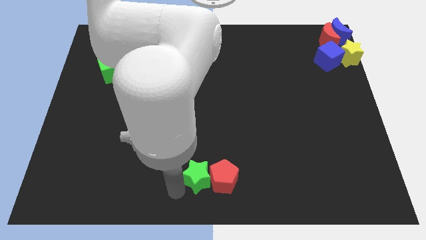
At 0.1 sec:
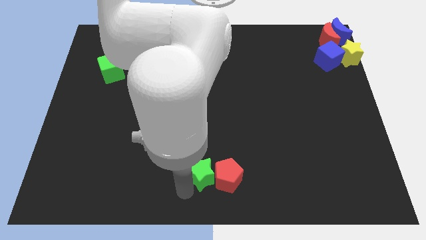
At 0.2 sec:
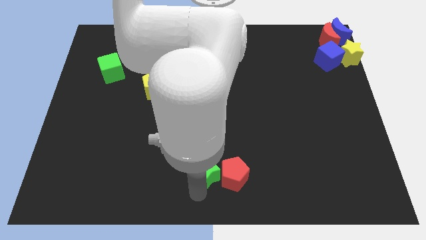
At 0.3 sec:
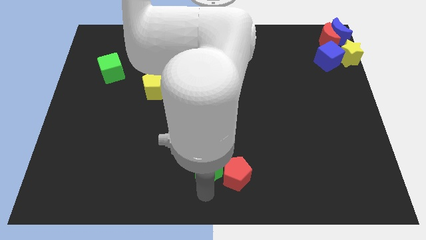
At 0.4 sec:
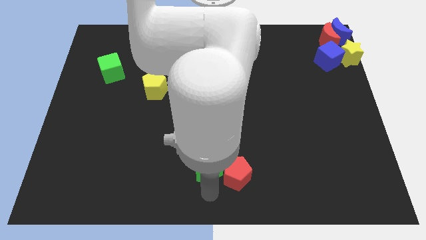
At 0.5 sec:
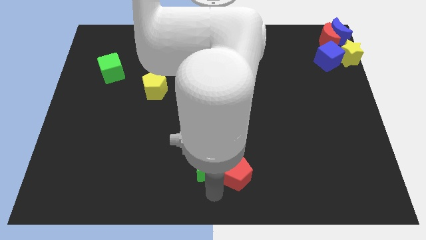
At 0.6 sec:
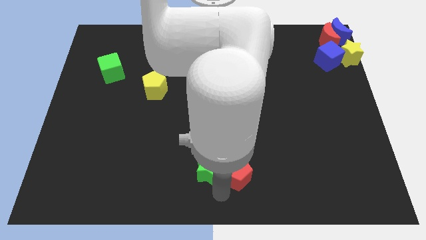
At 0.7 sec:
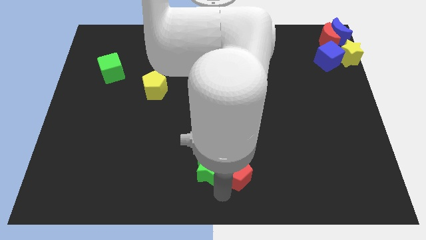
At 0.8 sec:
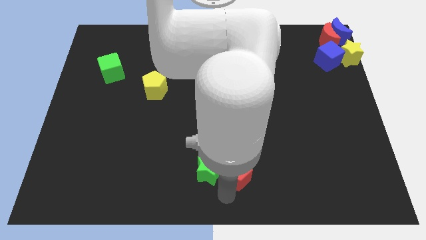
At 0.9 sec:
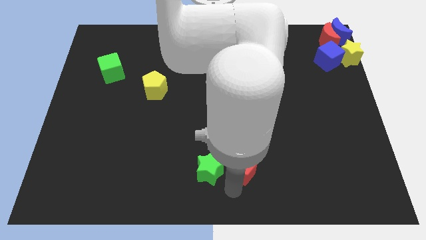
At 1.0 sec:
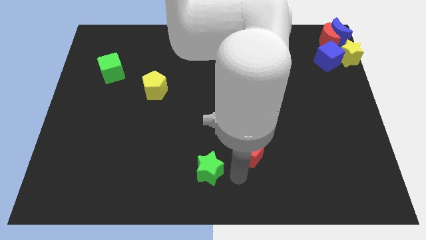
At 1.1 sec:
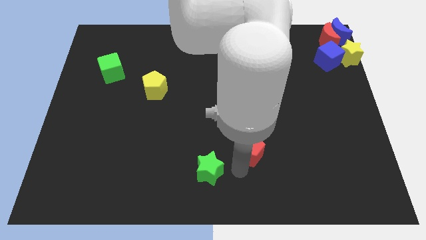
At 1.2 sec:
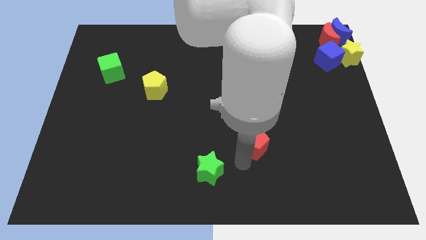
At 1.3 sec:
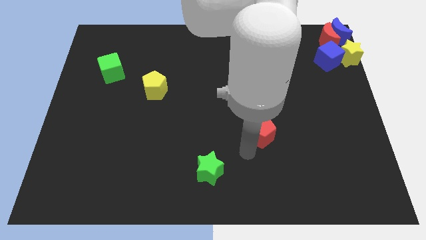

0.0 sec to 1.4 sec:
push the red pentagon away from the green star

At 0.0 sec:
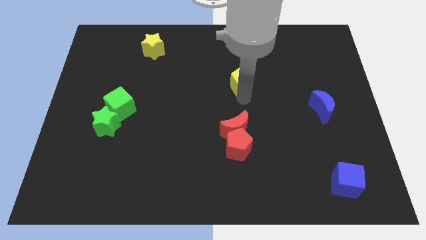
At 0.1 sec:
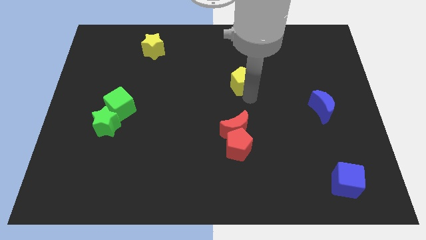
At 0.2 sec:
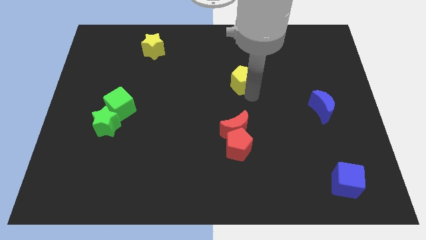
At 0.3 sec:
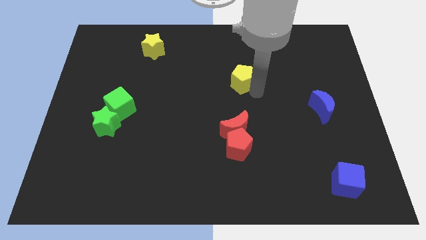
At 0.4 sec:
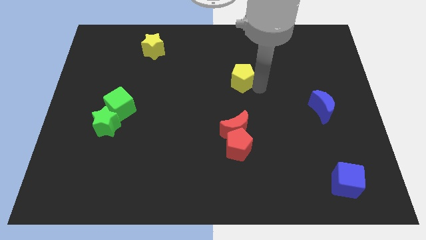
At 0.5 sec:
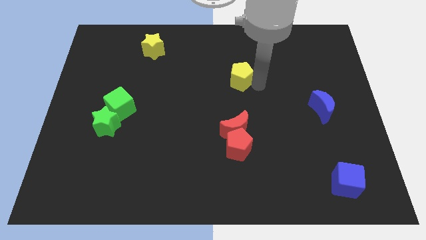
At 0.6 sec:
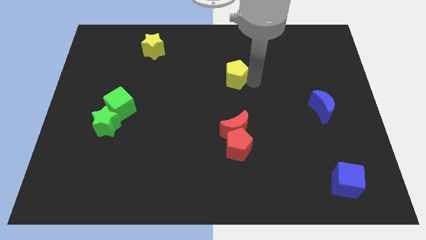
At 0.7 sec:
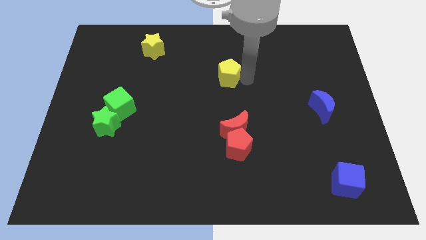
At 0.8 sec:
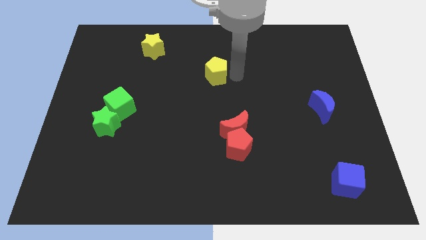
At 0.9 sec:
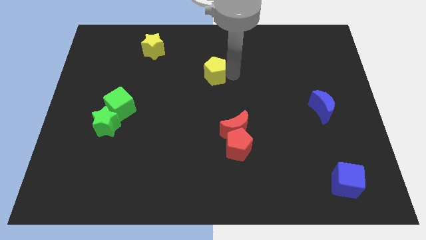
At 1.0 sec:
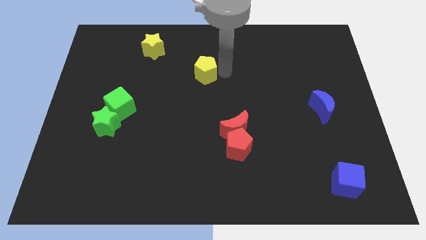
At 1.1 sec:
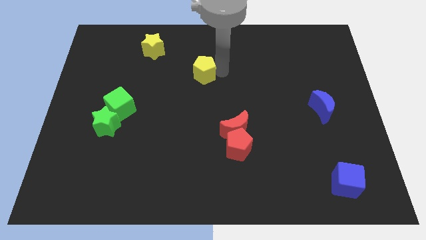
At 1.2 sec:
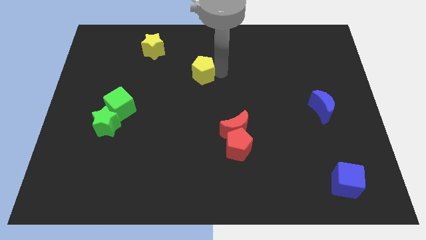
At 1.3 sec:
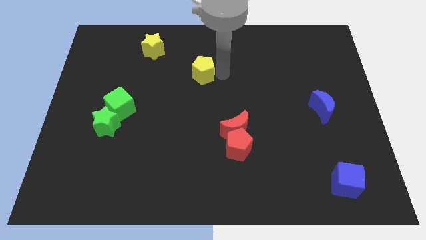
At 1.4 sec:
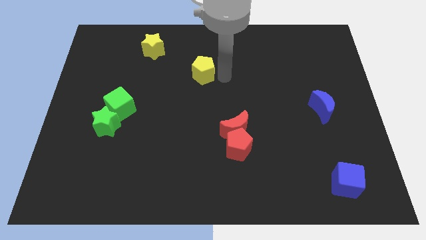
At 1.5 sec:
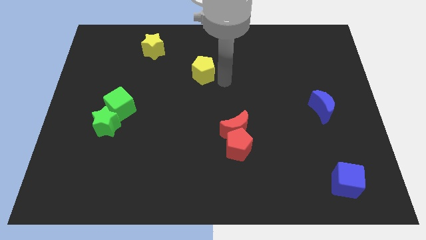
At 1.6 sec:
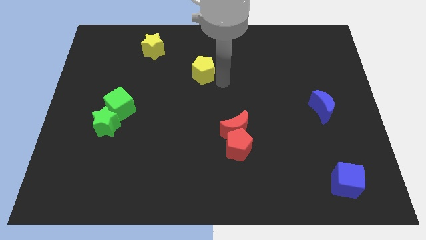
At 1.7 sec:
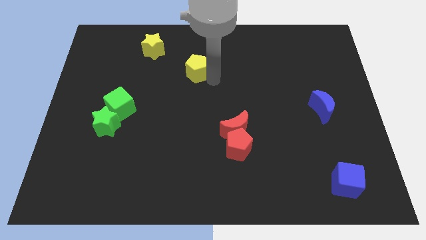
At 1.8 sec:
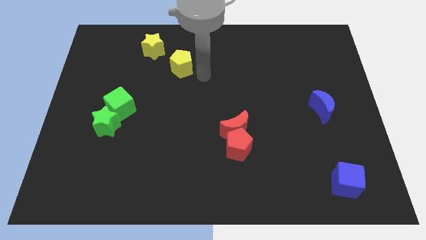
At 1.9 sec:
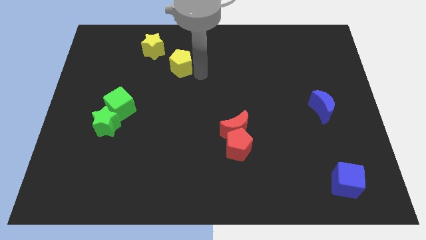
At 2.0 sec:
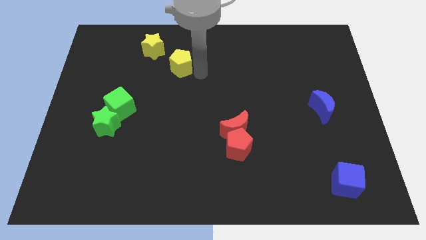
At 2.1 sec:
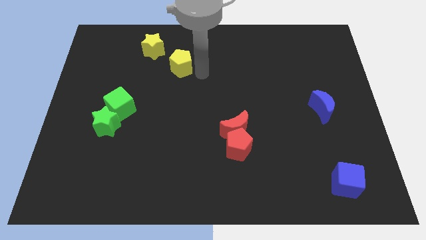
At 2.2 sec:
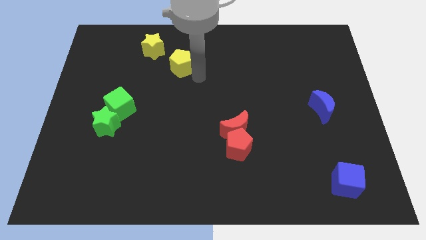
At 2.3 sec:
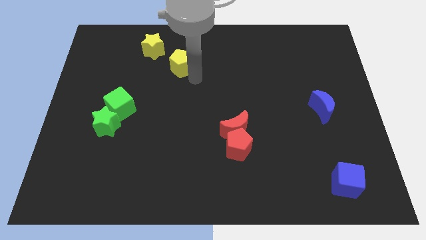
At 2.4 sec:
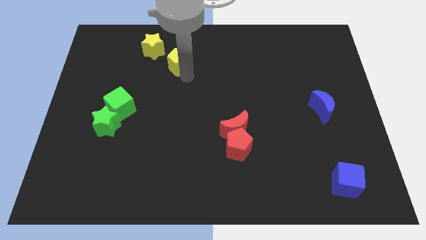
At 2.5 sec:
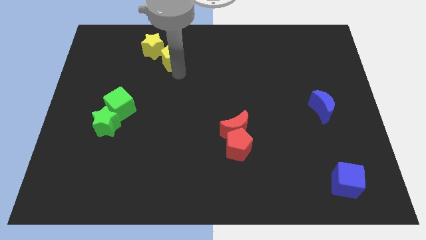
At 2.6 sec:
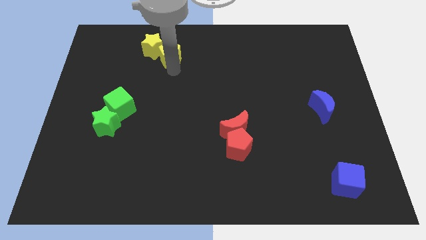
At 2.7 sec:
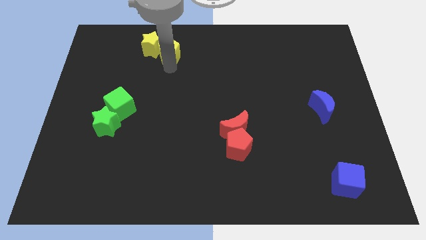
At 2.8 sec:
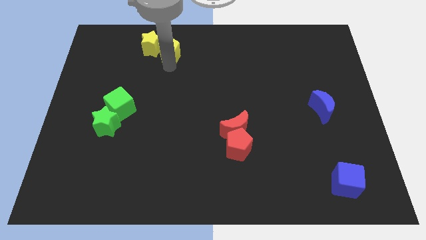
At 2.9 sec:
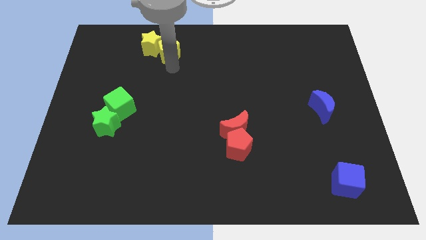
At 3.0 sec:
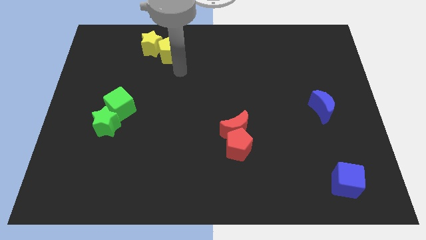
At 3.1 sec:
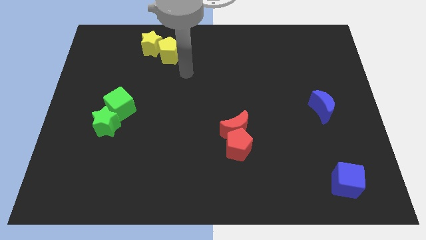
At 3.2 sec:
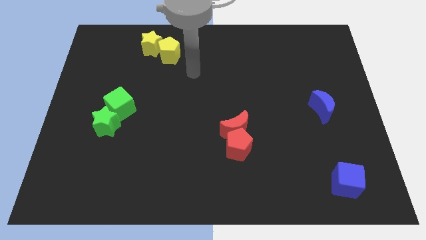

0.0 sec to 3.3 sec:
put the yellow pentagon at the bottom right of the yellow star

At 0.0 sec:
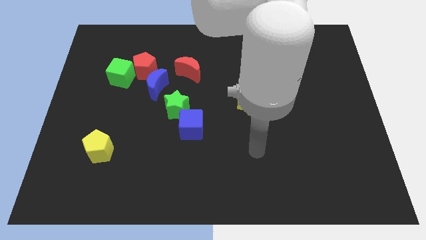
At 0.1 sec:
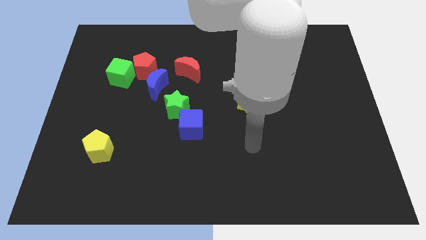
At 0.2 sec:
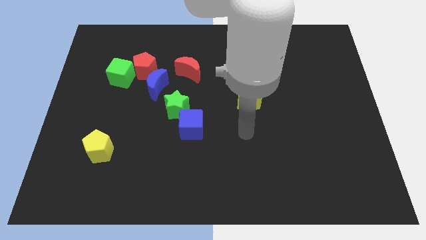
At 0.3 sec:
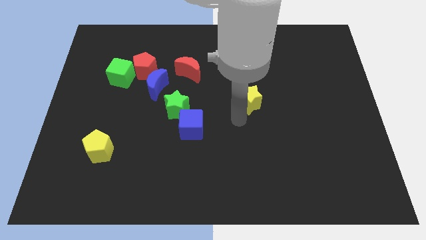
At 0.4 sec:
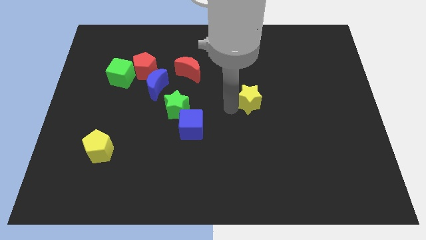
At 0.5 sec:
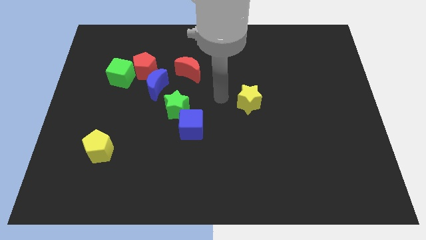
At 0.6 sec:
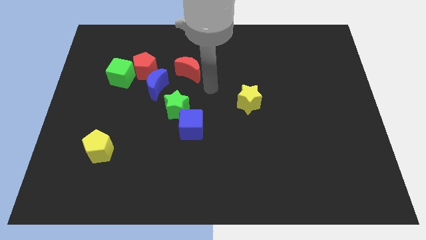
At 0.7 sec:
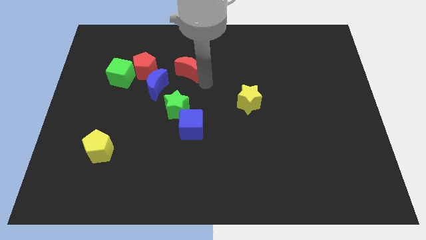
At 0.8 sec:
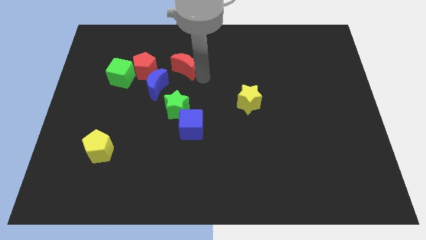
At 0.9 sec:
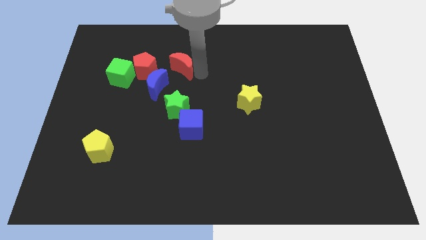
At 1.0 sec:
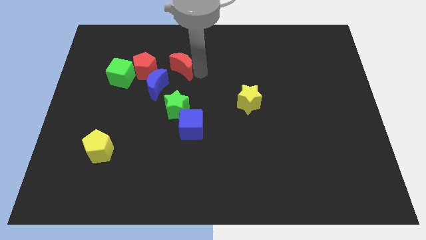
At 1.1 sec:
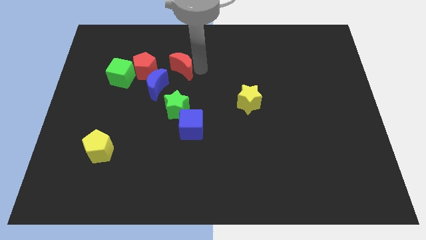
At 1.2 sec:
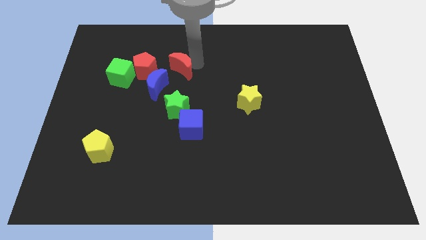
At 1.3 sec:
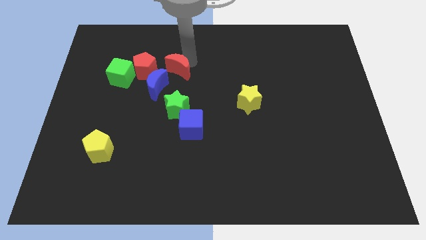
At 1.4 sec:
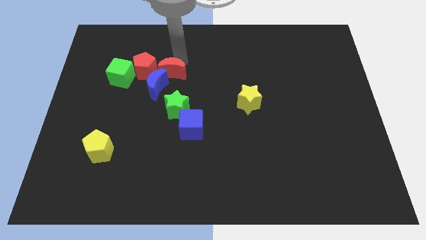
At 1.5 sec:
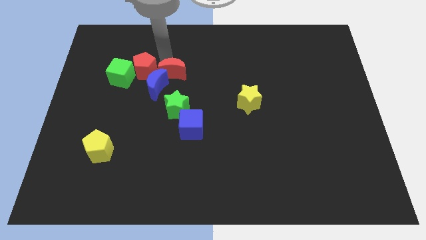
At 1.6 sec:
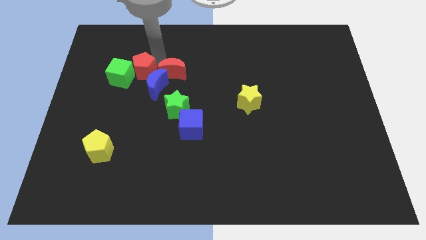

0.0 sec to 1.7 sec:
slightly move the red moon right to the red pentagon

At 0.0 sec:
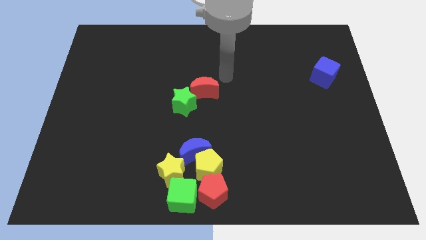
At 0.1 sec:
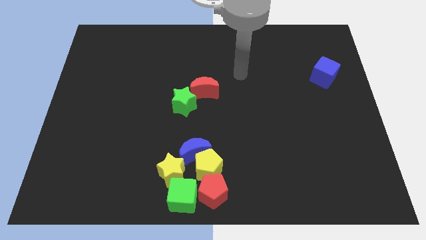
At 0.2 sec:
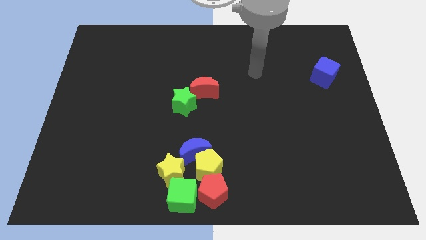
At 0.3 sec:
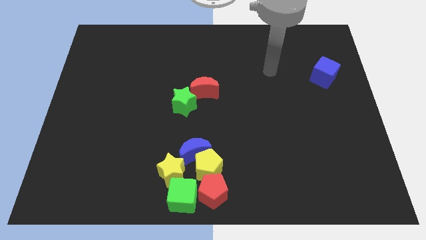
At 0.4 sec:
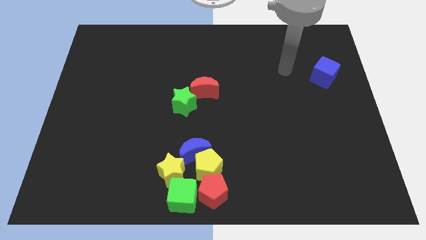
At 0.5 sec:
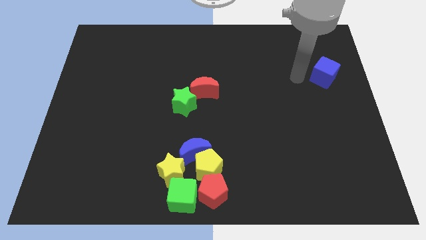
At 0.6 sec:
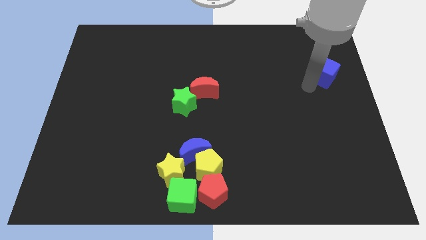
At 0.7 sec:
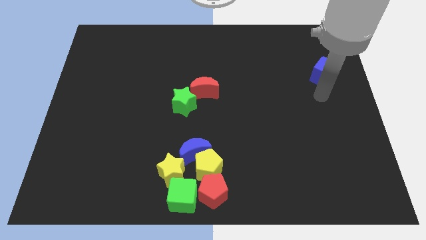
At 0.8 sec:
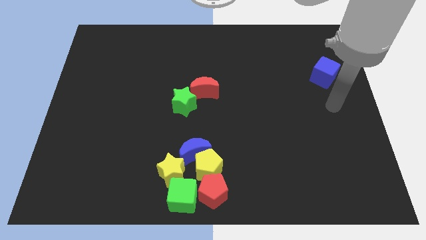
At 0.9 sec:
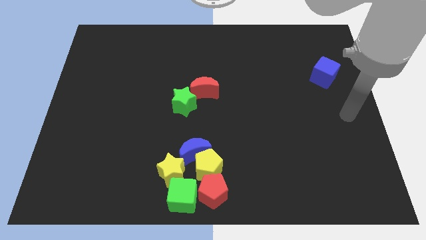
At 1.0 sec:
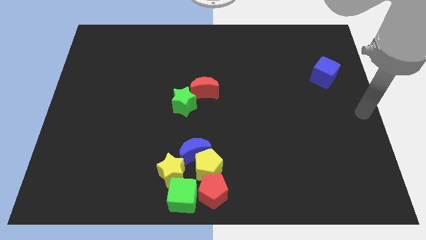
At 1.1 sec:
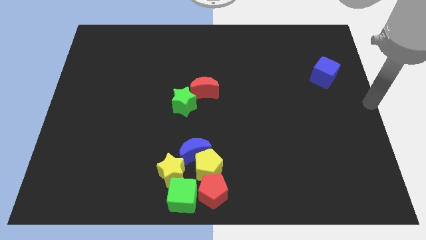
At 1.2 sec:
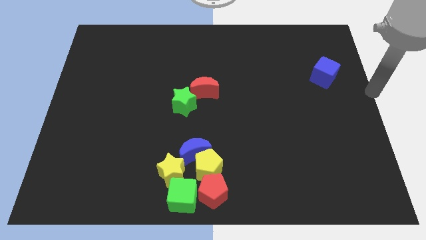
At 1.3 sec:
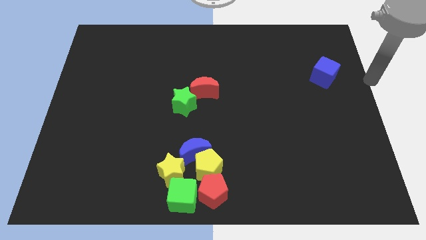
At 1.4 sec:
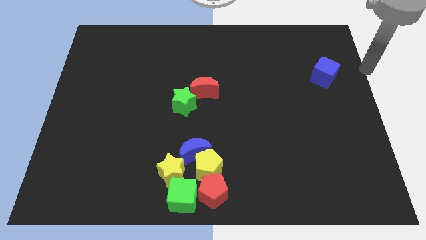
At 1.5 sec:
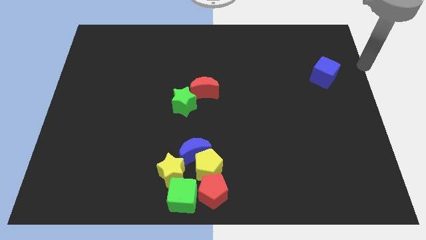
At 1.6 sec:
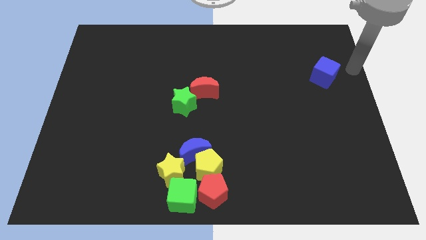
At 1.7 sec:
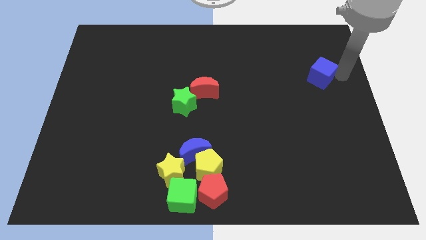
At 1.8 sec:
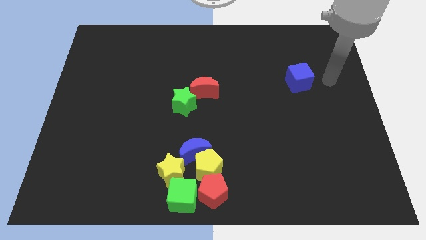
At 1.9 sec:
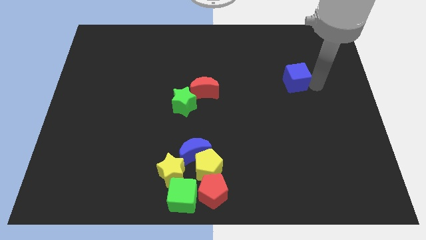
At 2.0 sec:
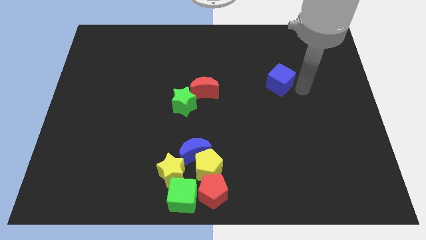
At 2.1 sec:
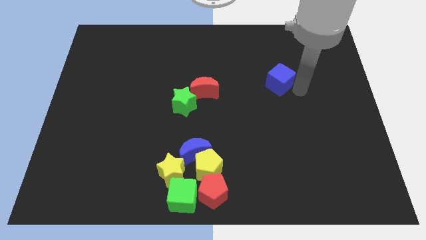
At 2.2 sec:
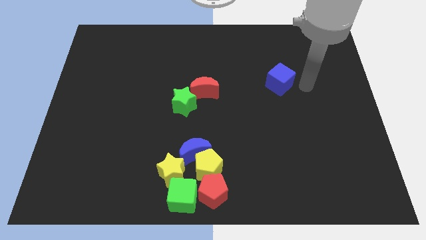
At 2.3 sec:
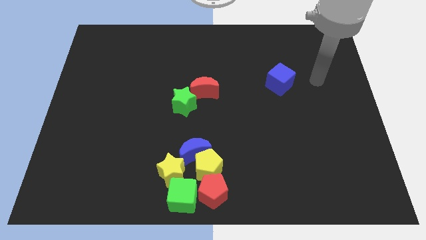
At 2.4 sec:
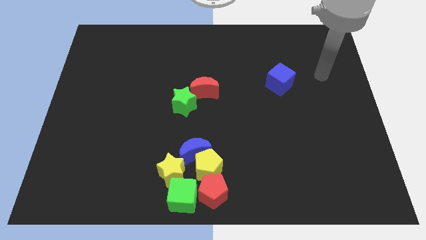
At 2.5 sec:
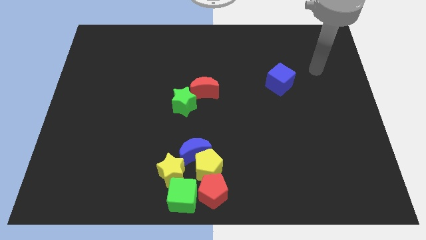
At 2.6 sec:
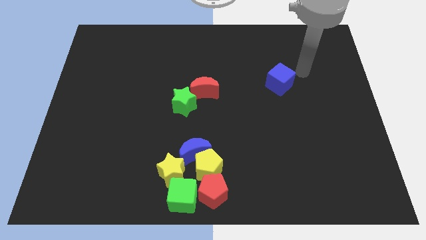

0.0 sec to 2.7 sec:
push the blue cube to the left of the board
